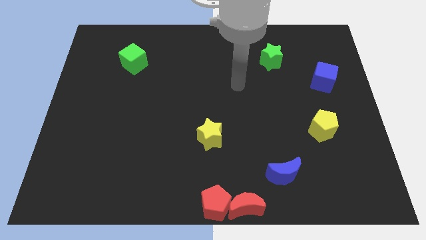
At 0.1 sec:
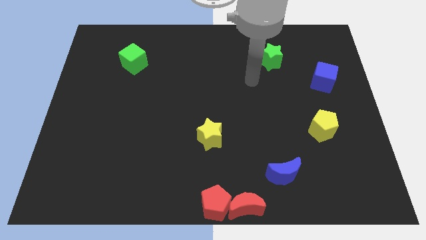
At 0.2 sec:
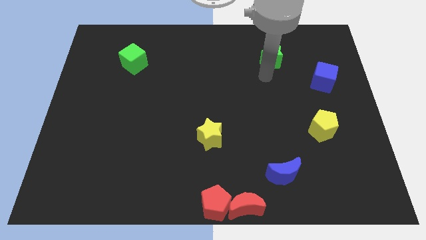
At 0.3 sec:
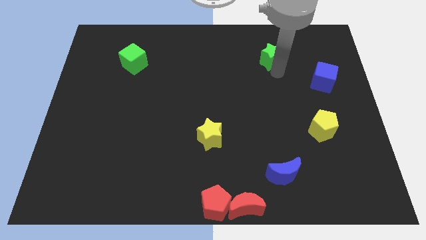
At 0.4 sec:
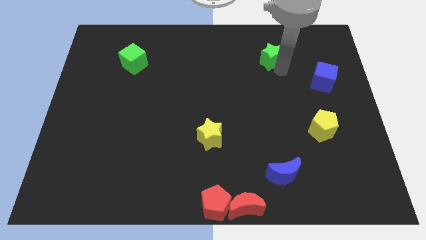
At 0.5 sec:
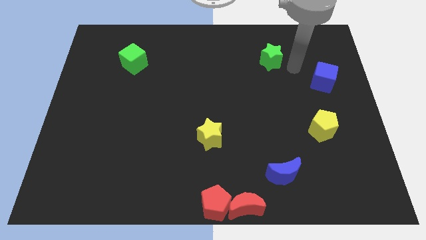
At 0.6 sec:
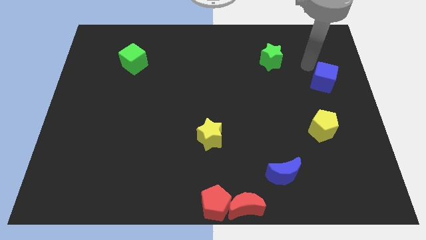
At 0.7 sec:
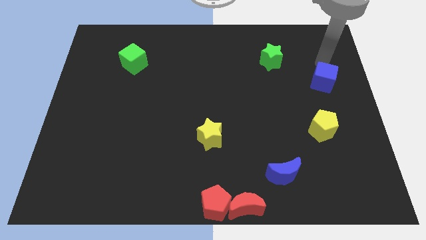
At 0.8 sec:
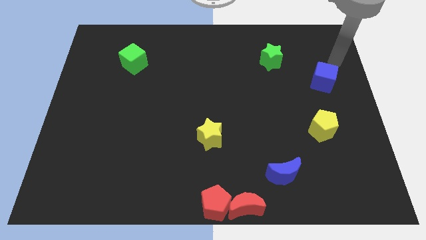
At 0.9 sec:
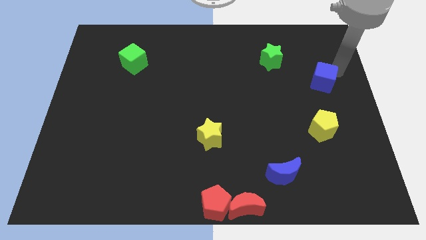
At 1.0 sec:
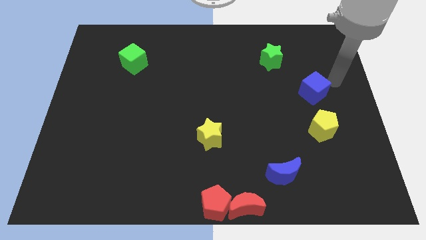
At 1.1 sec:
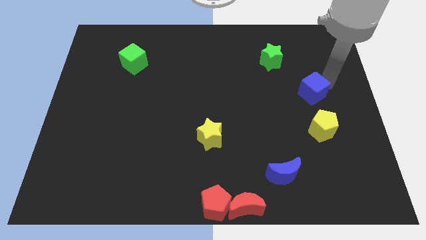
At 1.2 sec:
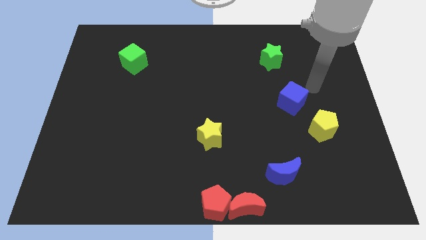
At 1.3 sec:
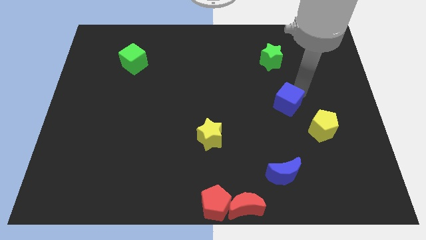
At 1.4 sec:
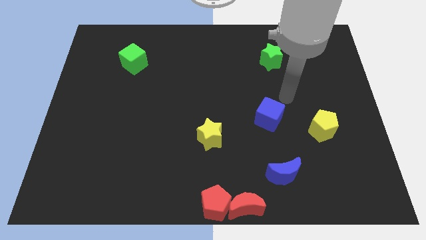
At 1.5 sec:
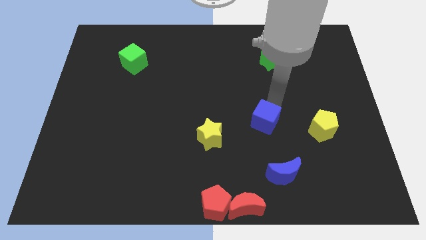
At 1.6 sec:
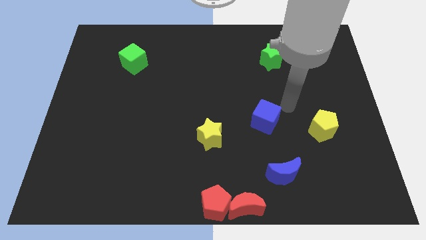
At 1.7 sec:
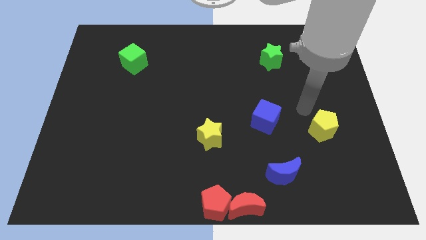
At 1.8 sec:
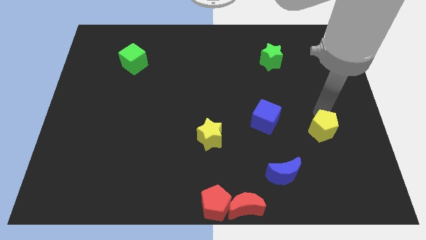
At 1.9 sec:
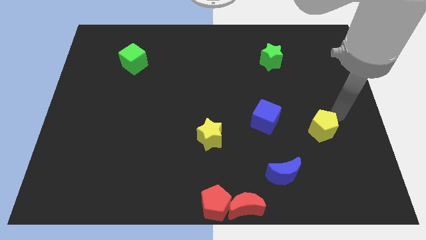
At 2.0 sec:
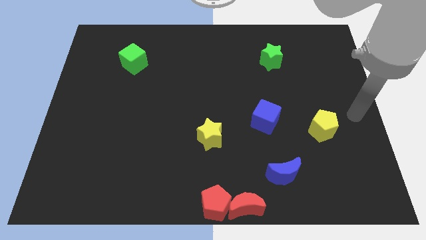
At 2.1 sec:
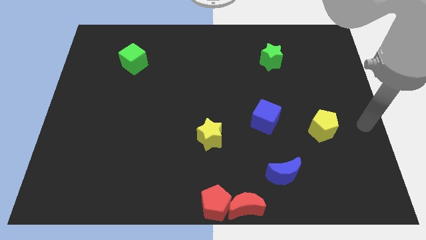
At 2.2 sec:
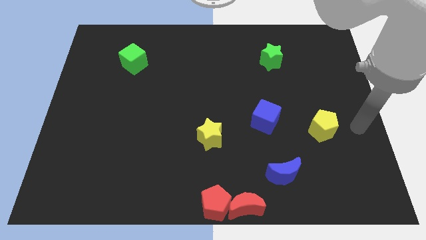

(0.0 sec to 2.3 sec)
push the blue cube in between the yellow star and the yellow pentagon

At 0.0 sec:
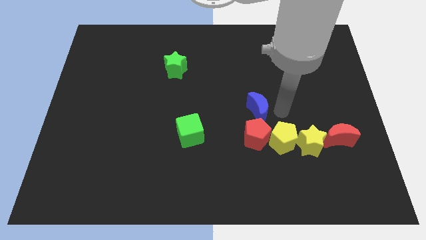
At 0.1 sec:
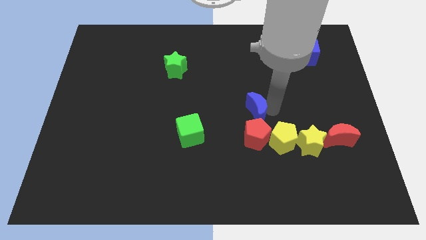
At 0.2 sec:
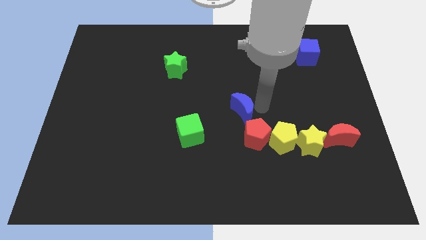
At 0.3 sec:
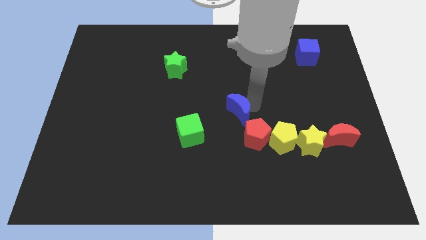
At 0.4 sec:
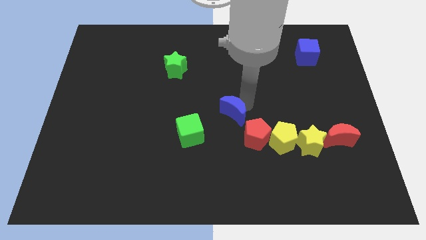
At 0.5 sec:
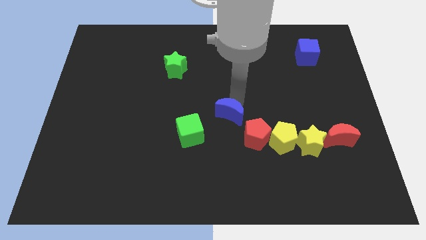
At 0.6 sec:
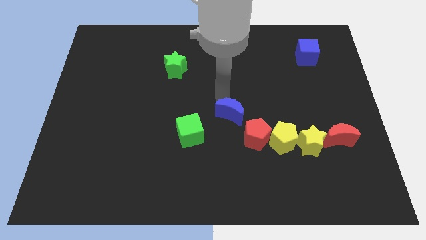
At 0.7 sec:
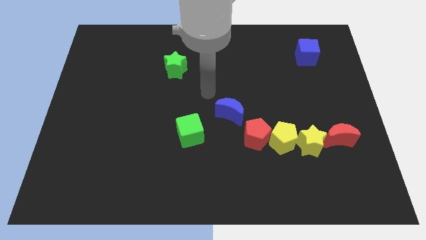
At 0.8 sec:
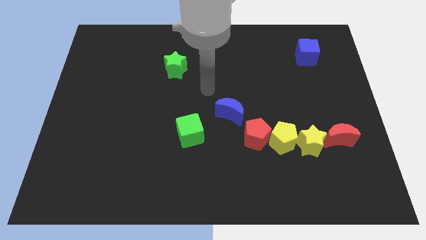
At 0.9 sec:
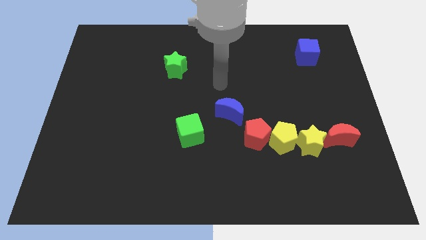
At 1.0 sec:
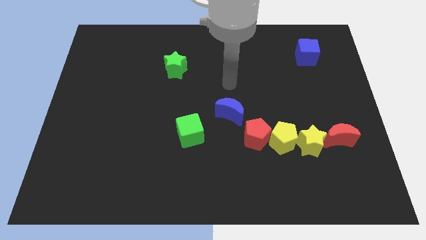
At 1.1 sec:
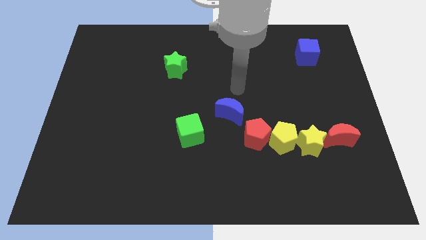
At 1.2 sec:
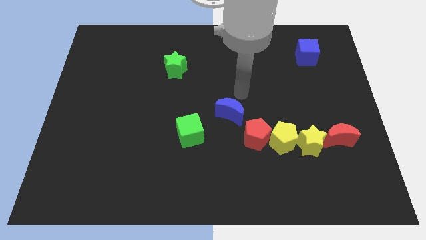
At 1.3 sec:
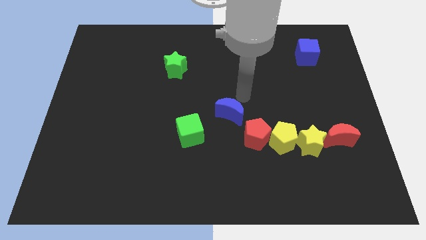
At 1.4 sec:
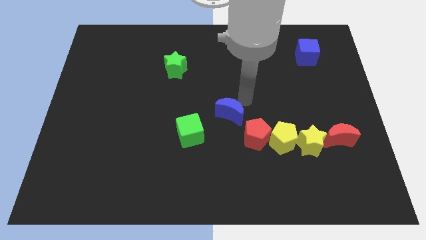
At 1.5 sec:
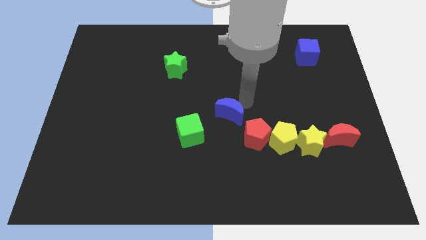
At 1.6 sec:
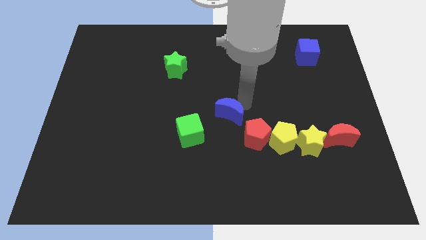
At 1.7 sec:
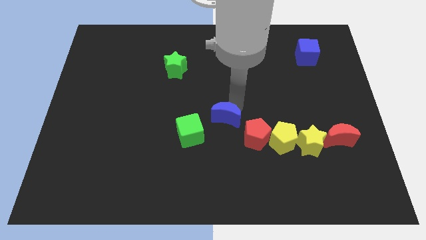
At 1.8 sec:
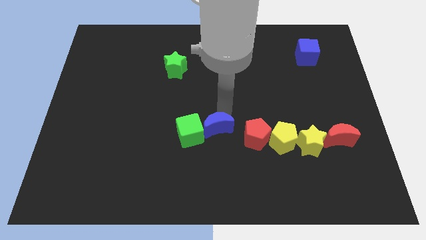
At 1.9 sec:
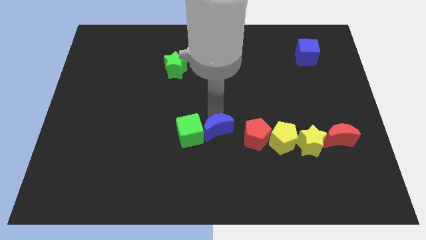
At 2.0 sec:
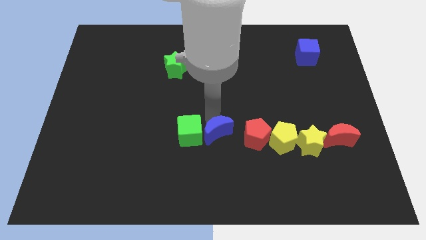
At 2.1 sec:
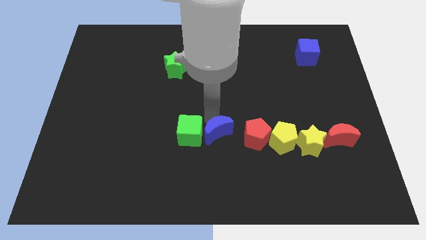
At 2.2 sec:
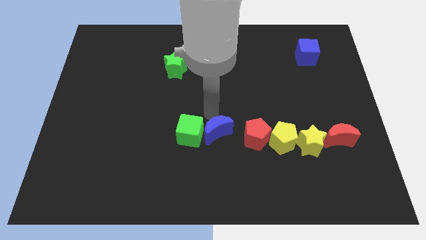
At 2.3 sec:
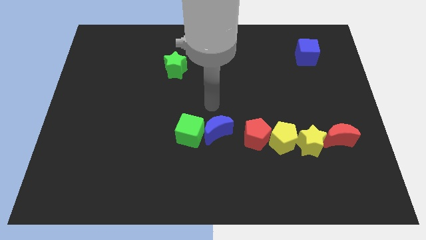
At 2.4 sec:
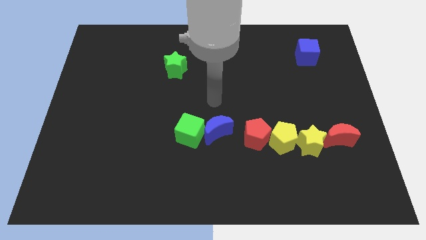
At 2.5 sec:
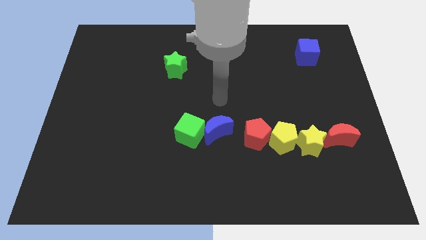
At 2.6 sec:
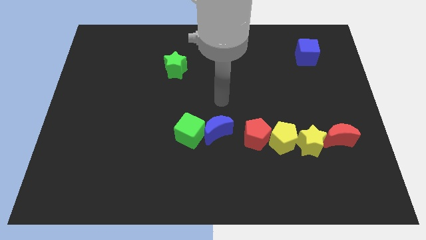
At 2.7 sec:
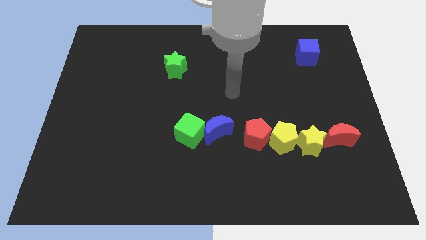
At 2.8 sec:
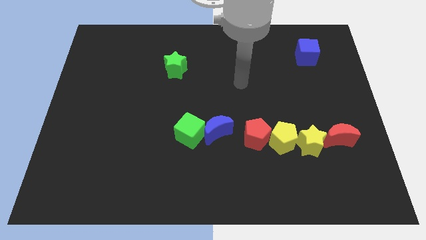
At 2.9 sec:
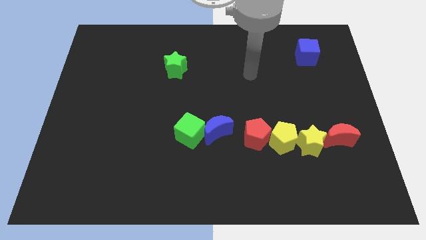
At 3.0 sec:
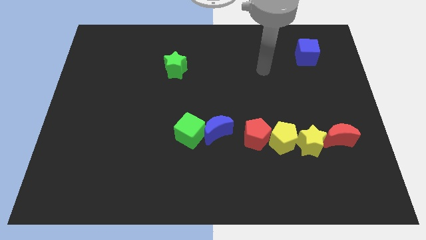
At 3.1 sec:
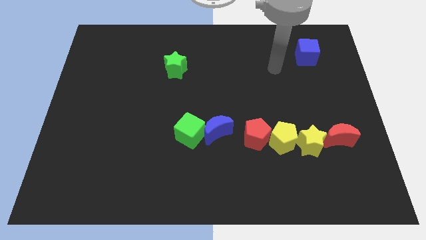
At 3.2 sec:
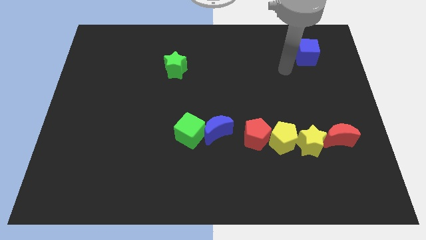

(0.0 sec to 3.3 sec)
move the blue crescent right to the green cube

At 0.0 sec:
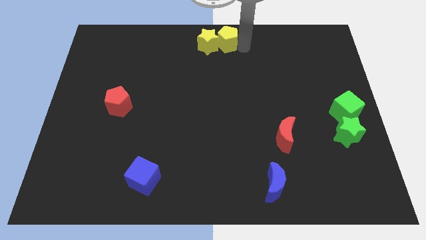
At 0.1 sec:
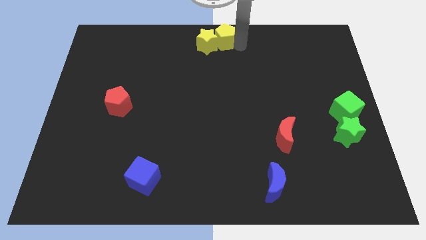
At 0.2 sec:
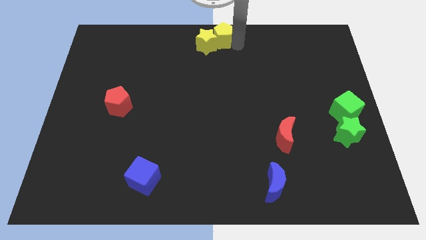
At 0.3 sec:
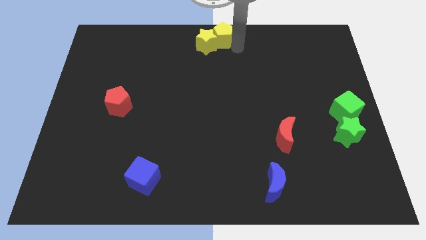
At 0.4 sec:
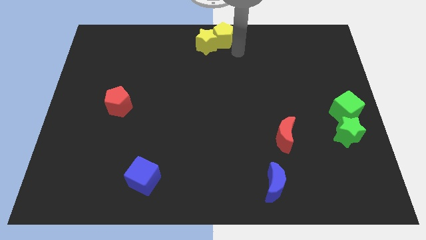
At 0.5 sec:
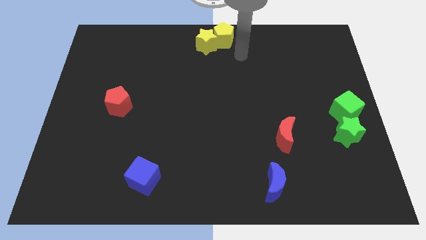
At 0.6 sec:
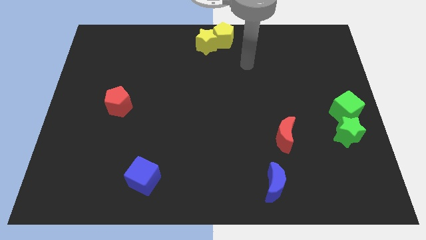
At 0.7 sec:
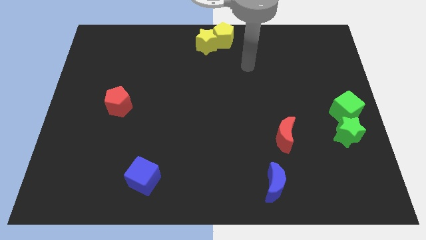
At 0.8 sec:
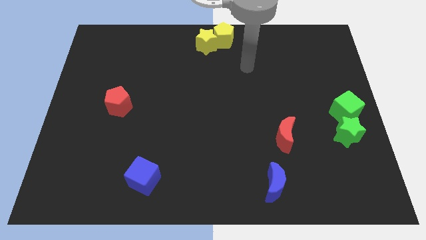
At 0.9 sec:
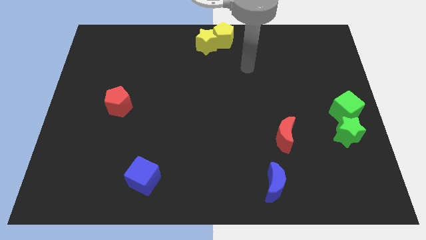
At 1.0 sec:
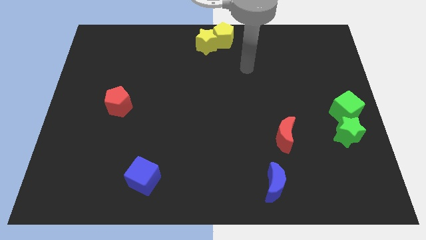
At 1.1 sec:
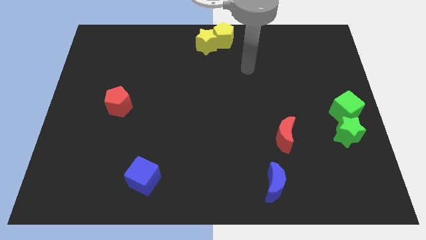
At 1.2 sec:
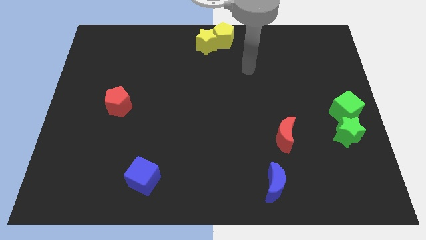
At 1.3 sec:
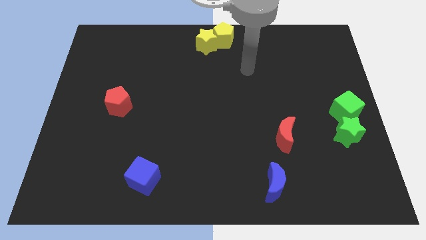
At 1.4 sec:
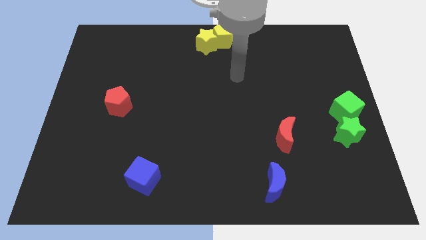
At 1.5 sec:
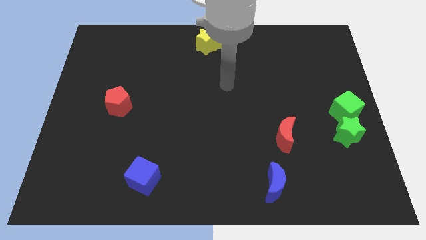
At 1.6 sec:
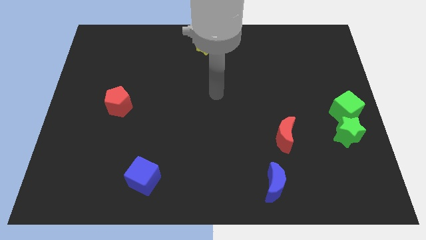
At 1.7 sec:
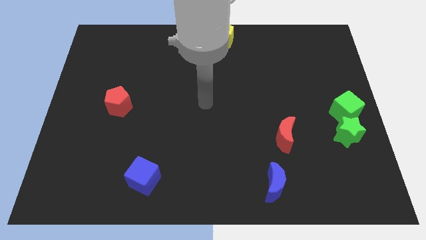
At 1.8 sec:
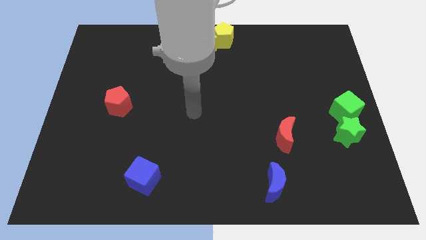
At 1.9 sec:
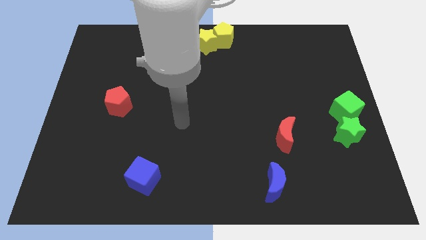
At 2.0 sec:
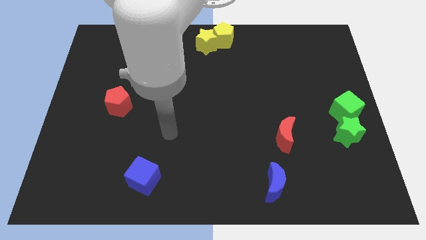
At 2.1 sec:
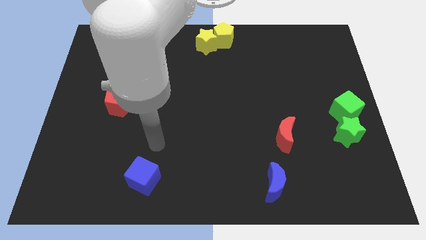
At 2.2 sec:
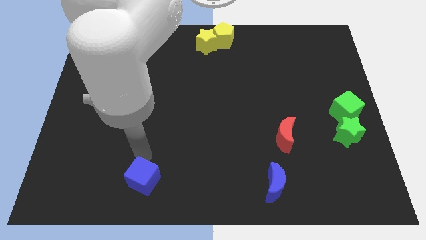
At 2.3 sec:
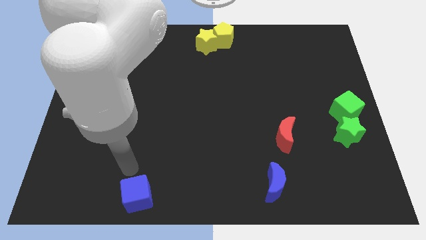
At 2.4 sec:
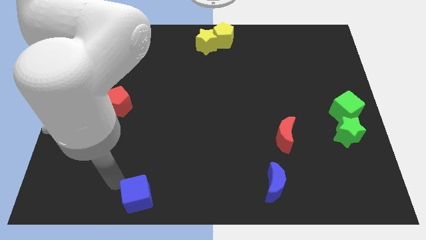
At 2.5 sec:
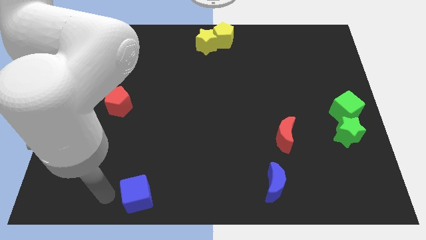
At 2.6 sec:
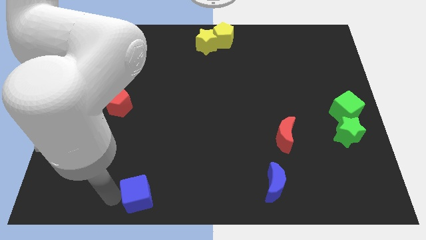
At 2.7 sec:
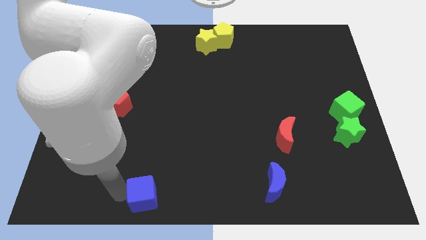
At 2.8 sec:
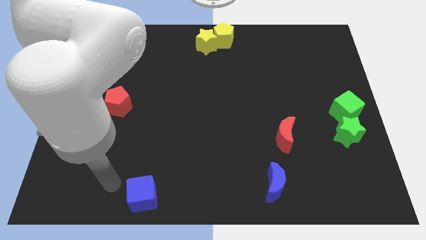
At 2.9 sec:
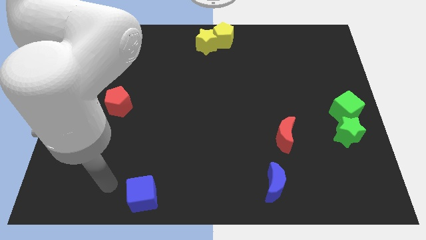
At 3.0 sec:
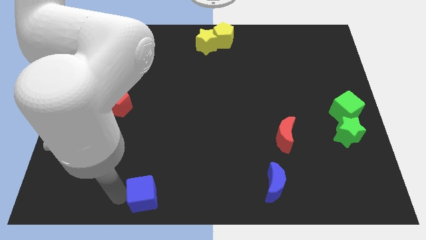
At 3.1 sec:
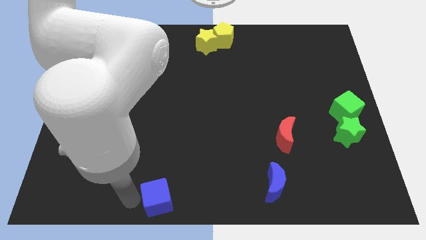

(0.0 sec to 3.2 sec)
point your arm left to blue cube

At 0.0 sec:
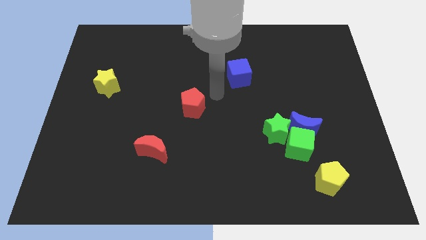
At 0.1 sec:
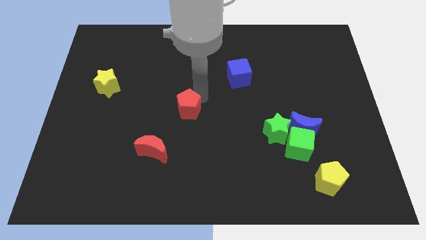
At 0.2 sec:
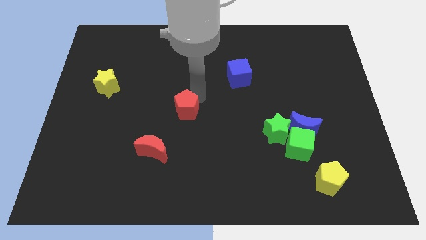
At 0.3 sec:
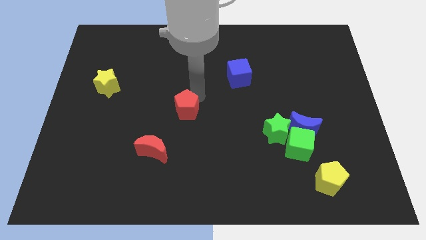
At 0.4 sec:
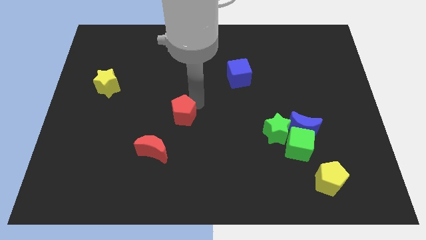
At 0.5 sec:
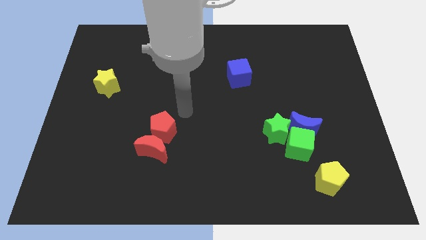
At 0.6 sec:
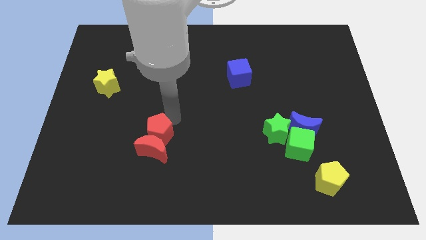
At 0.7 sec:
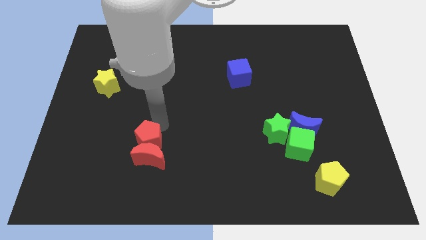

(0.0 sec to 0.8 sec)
move the red pentagon to the top of the red crescent
